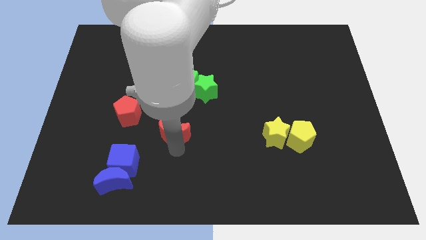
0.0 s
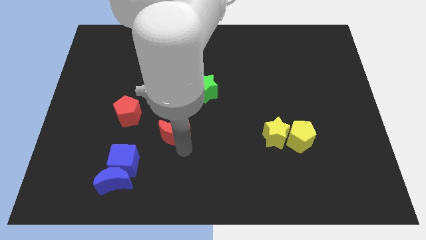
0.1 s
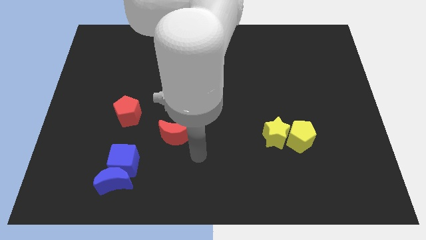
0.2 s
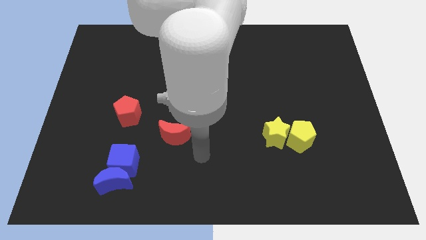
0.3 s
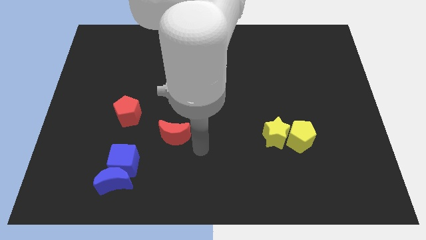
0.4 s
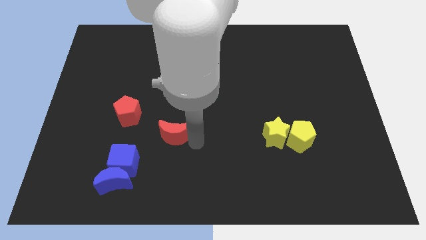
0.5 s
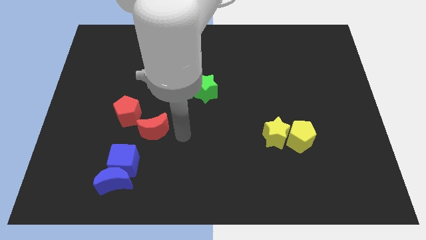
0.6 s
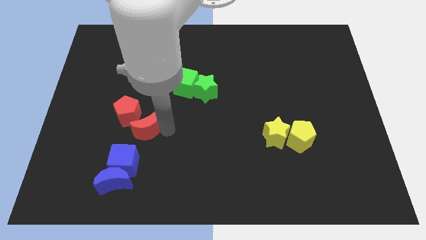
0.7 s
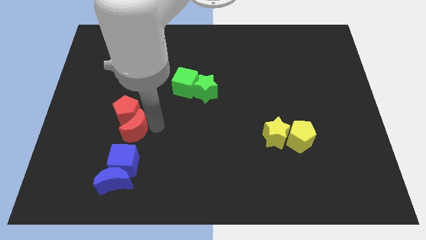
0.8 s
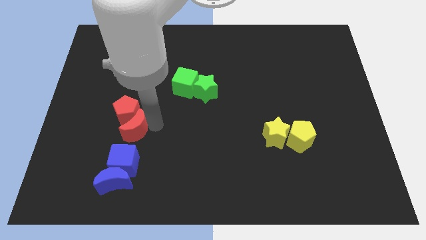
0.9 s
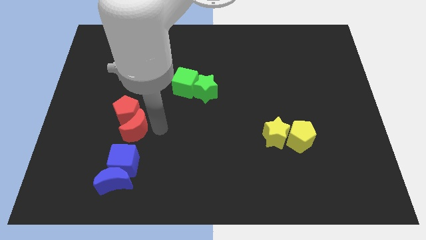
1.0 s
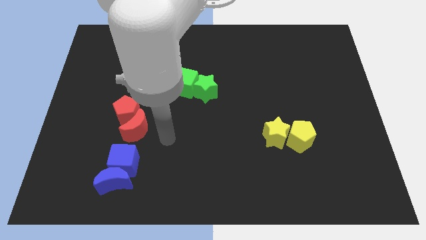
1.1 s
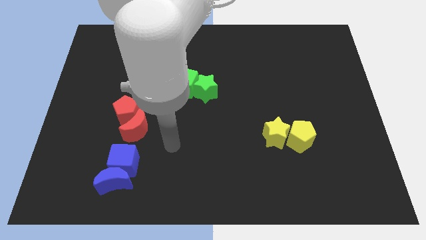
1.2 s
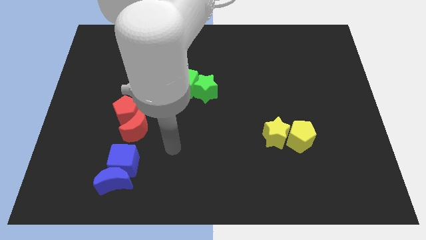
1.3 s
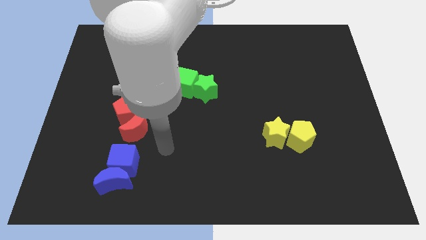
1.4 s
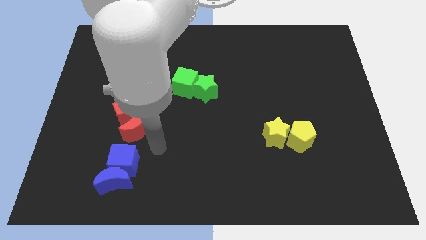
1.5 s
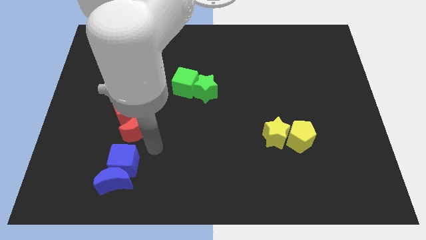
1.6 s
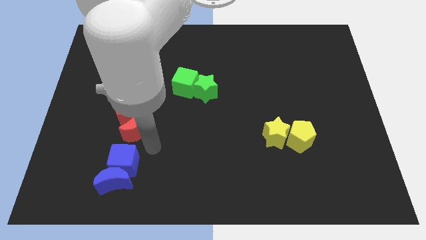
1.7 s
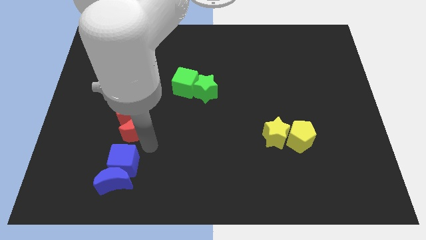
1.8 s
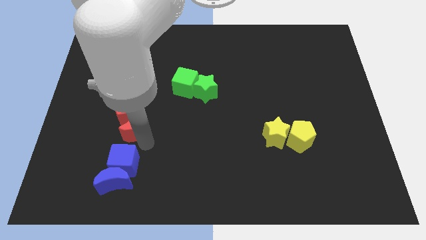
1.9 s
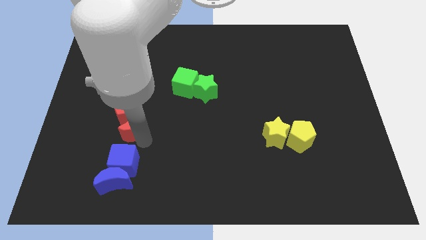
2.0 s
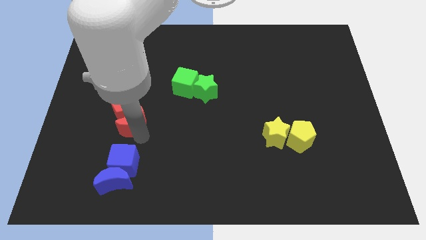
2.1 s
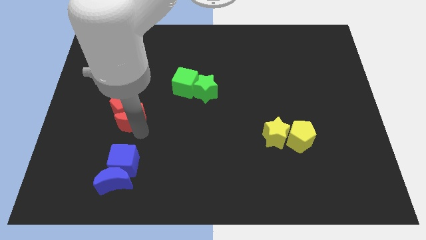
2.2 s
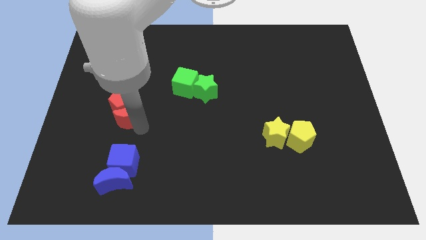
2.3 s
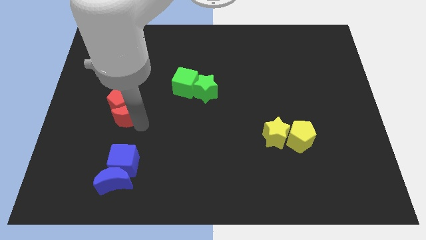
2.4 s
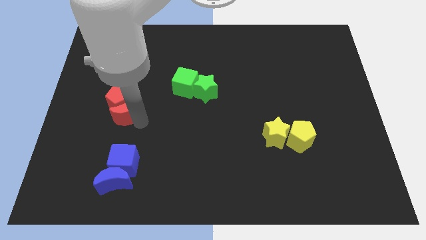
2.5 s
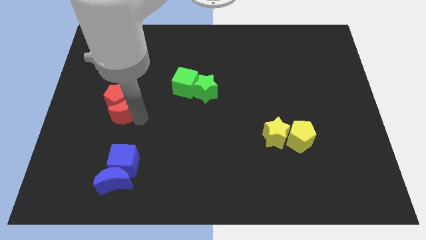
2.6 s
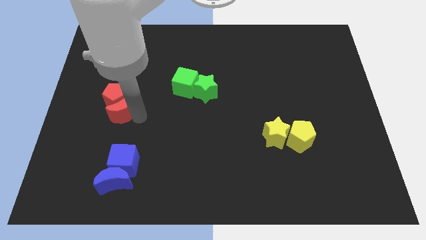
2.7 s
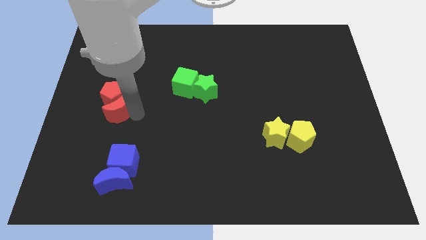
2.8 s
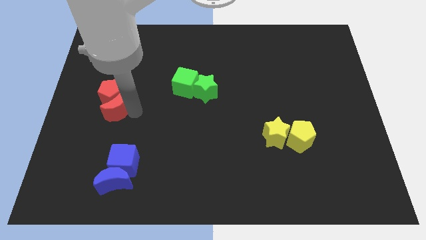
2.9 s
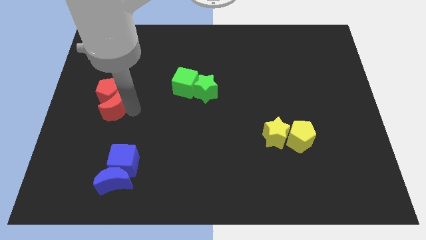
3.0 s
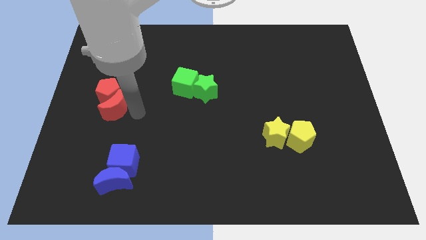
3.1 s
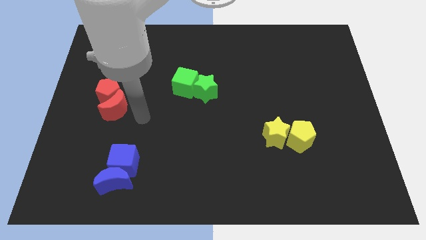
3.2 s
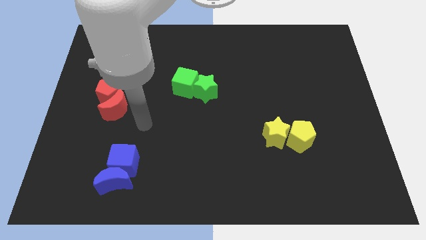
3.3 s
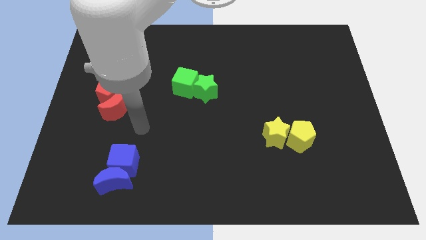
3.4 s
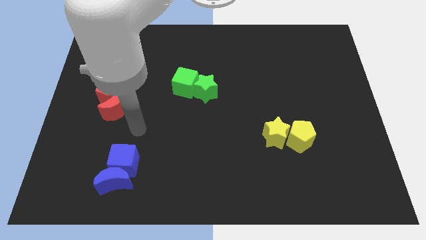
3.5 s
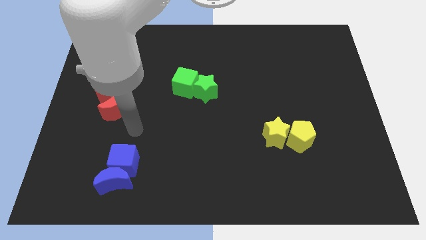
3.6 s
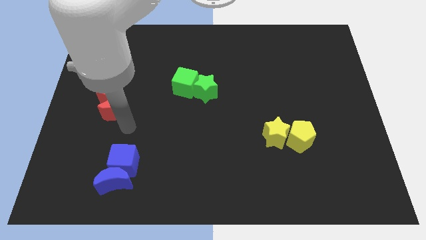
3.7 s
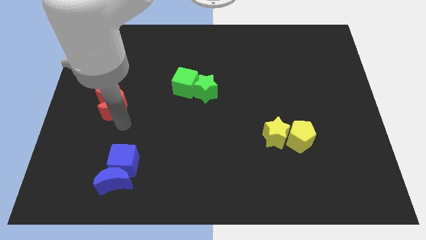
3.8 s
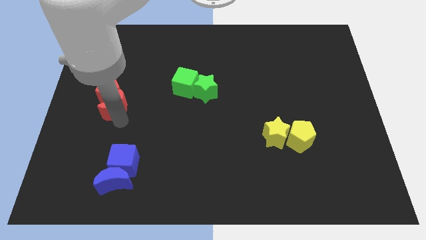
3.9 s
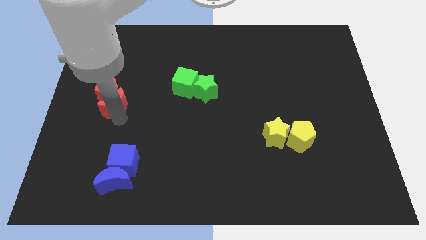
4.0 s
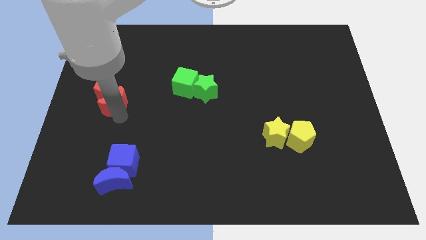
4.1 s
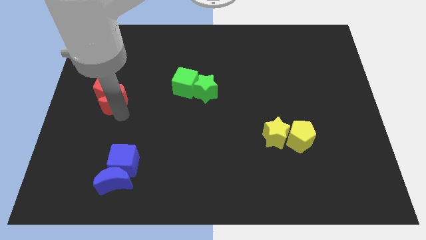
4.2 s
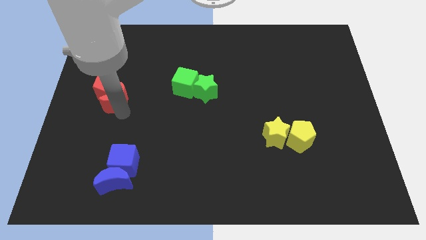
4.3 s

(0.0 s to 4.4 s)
move the red pentagon to the left of the green star and green cube along with the red crescent

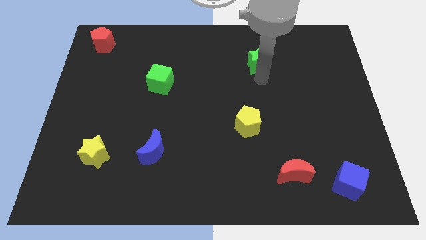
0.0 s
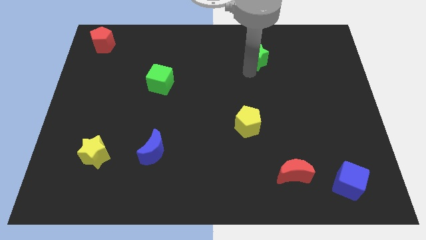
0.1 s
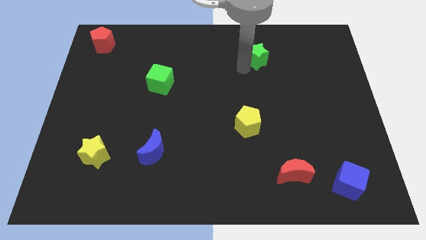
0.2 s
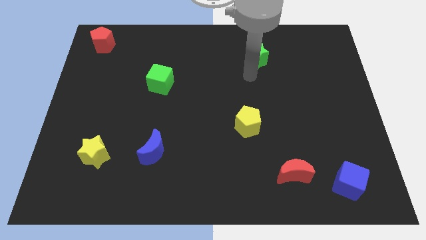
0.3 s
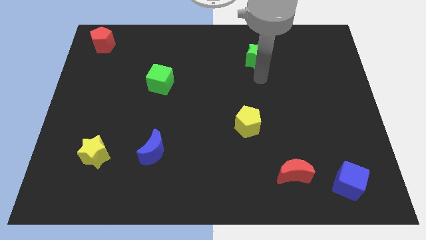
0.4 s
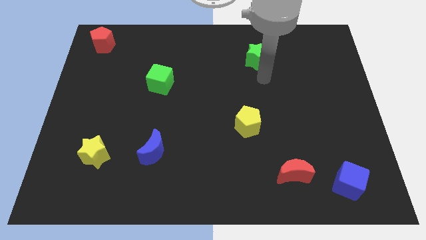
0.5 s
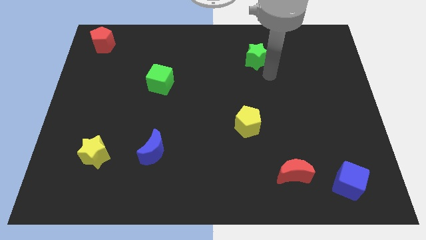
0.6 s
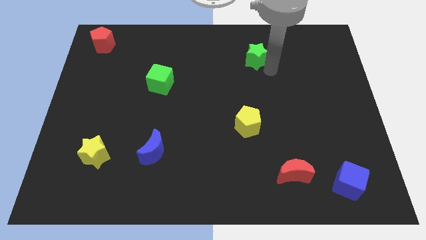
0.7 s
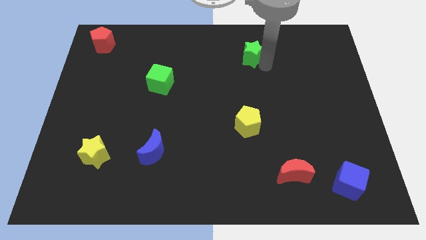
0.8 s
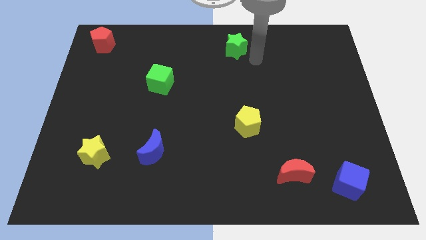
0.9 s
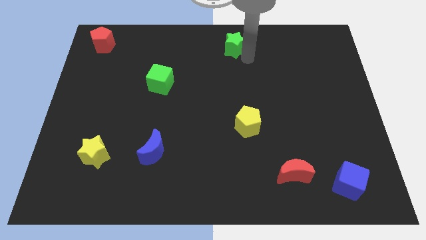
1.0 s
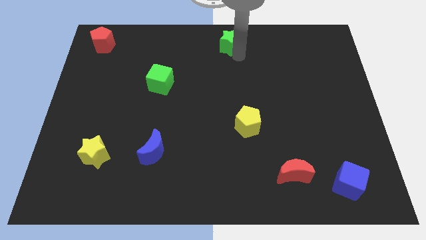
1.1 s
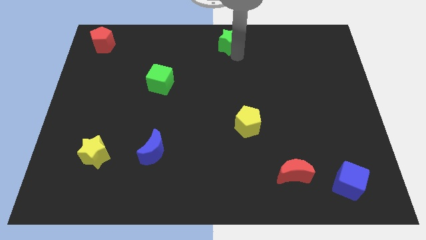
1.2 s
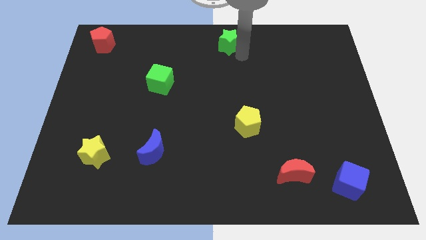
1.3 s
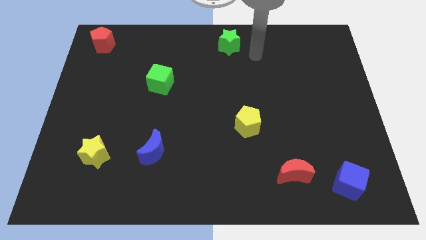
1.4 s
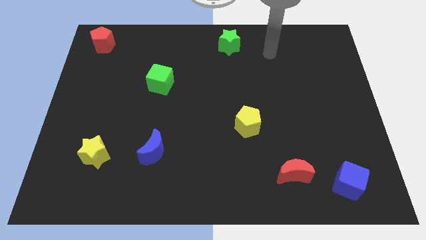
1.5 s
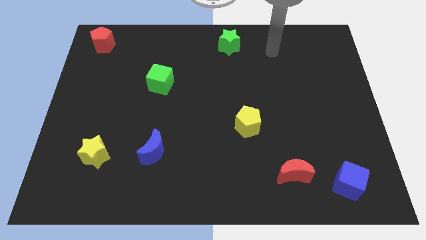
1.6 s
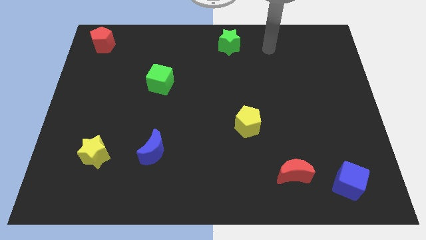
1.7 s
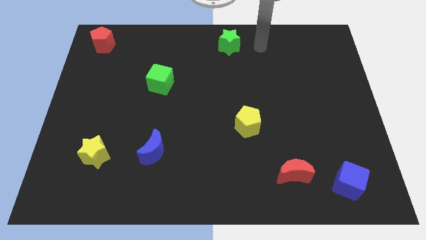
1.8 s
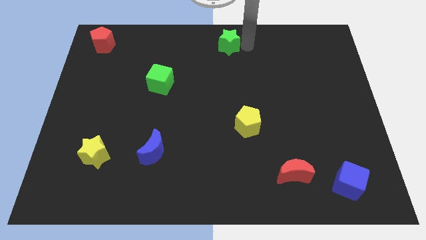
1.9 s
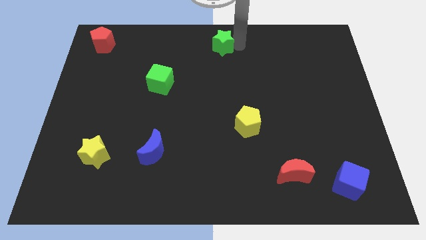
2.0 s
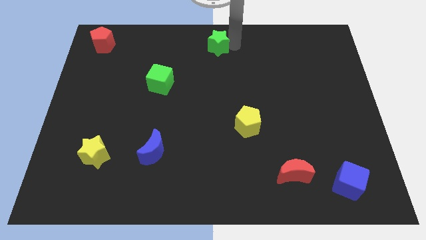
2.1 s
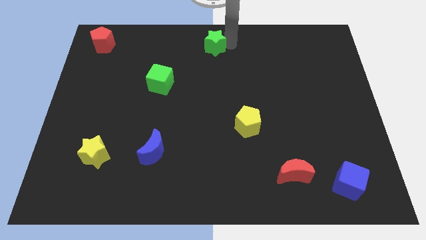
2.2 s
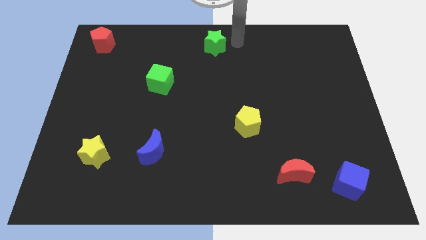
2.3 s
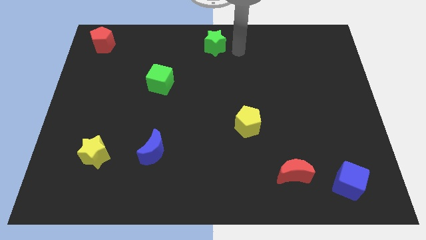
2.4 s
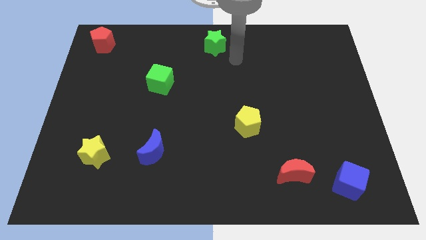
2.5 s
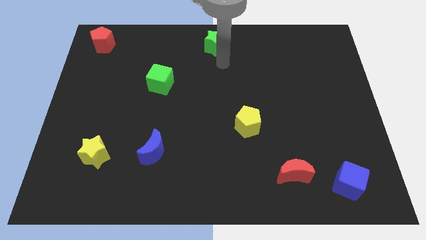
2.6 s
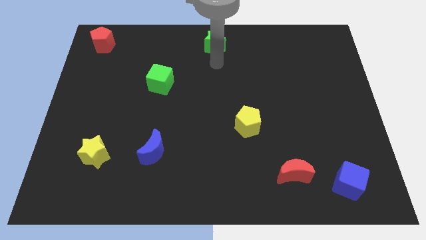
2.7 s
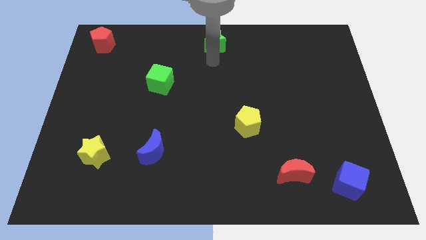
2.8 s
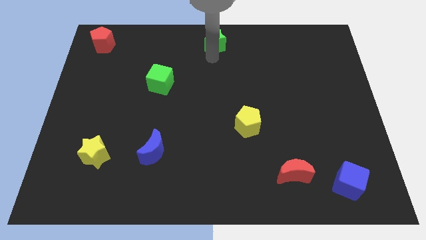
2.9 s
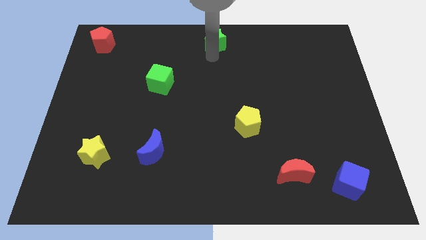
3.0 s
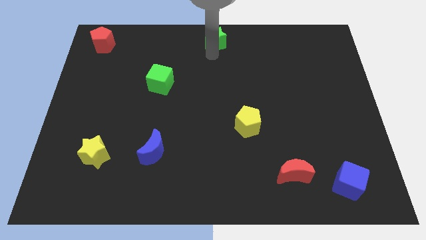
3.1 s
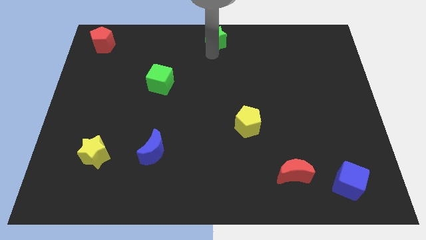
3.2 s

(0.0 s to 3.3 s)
push green star towards top middle of the board

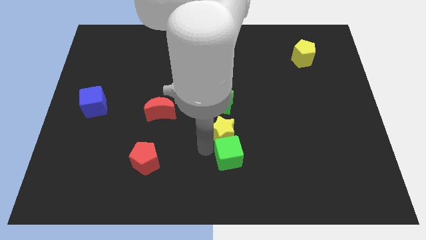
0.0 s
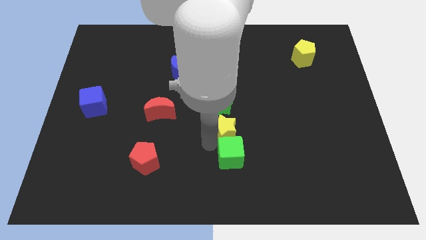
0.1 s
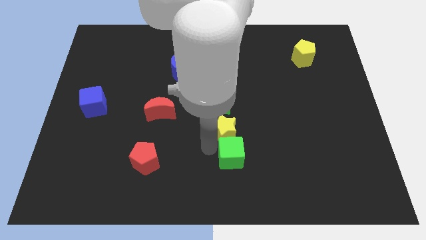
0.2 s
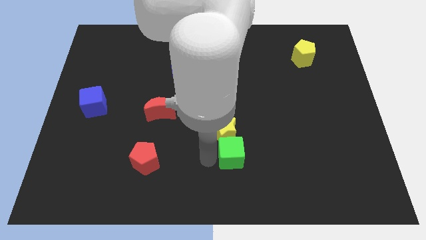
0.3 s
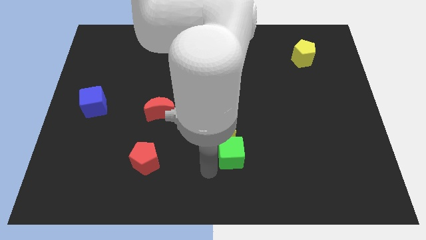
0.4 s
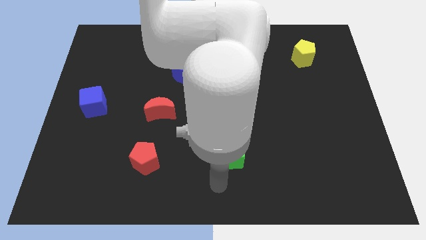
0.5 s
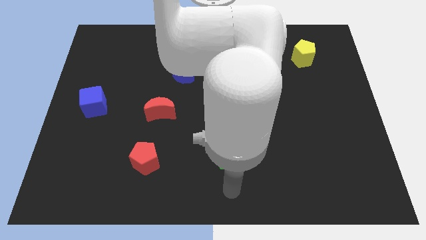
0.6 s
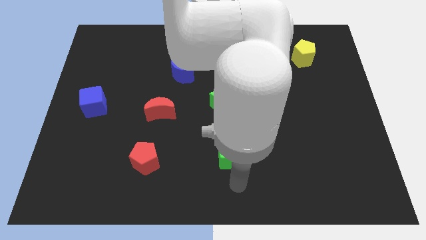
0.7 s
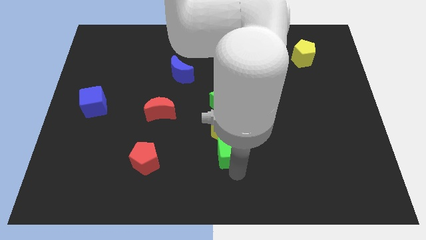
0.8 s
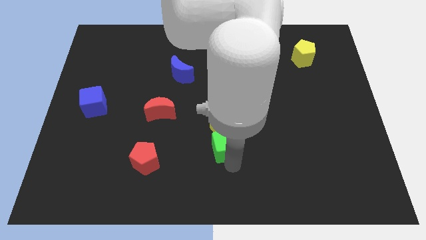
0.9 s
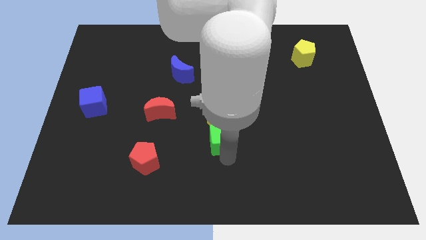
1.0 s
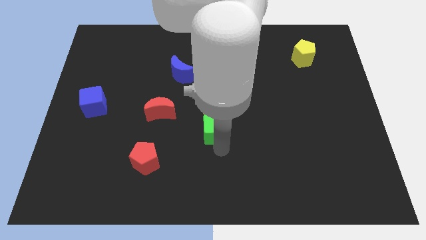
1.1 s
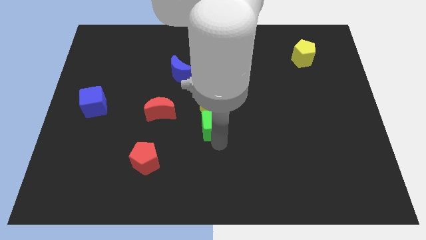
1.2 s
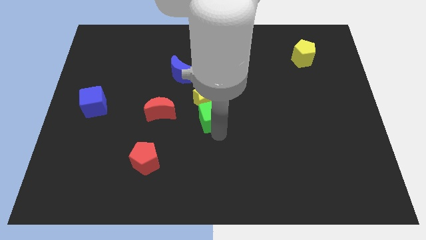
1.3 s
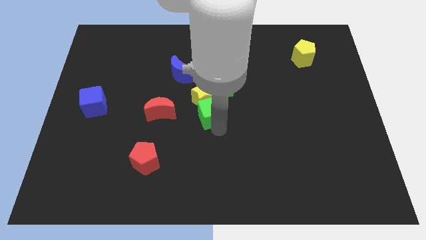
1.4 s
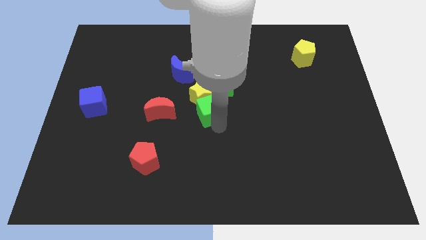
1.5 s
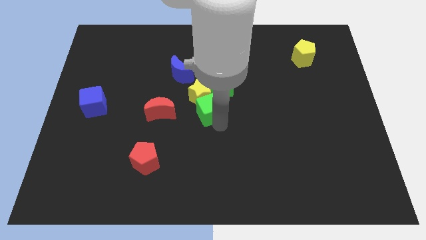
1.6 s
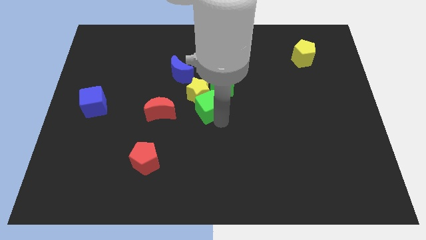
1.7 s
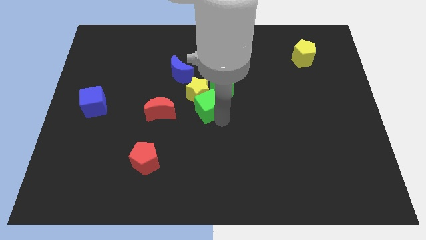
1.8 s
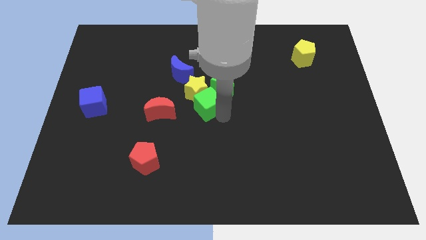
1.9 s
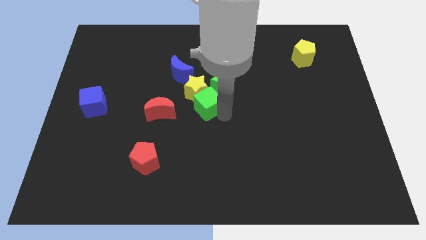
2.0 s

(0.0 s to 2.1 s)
push green cube towards the red moon
